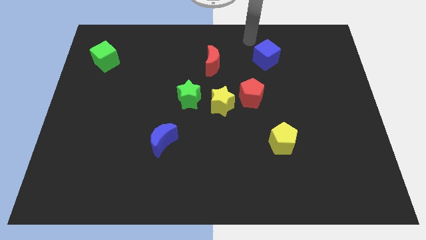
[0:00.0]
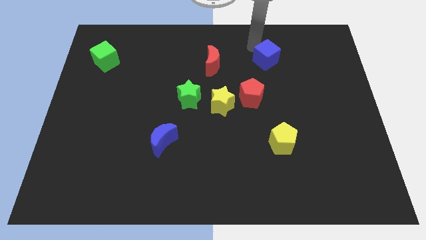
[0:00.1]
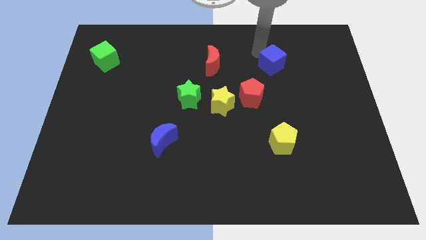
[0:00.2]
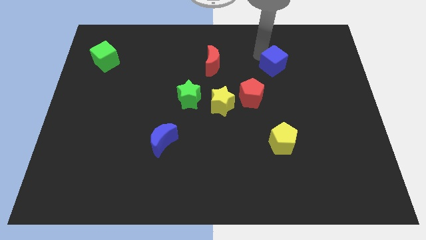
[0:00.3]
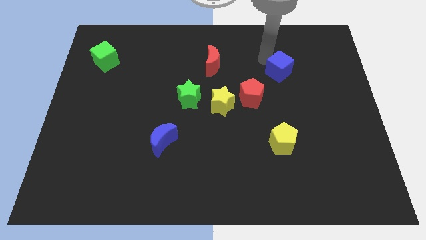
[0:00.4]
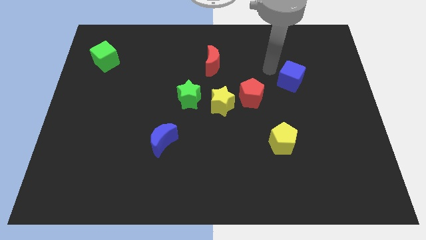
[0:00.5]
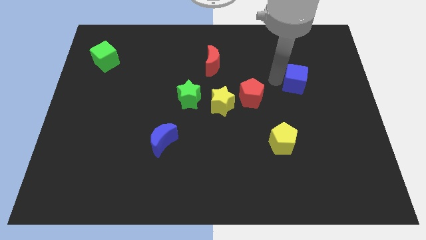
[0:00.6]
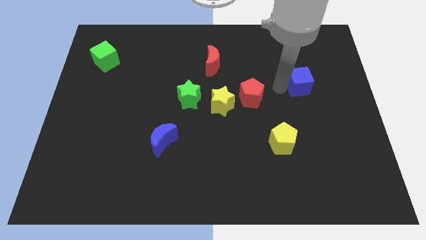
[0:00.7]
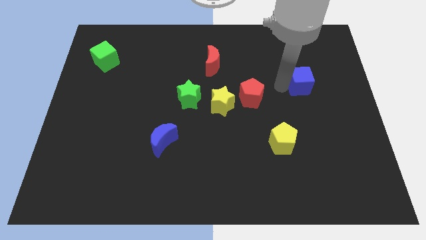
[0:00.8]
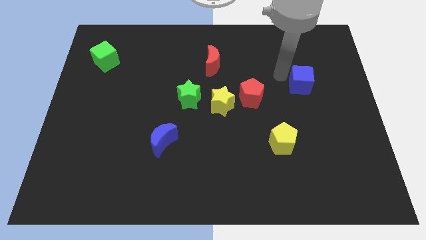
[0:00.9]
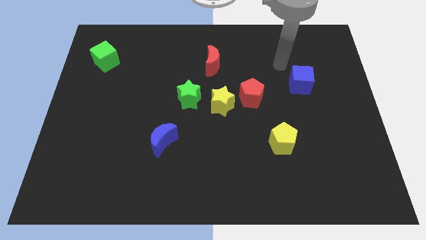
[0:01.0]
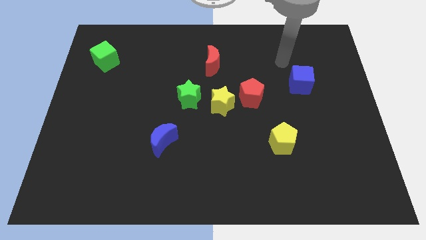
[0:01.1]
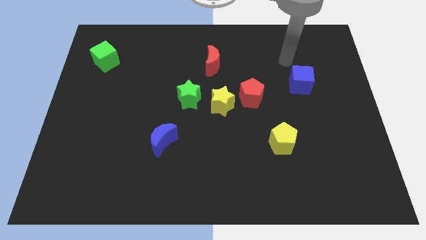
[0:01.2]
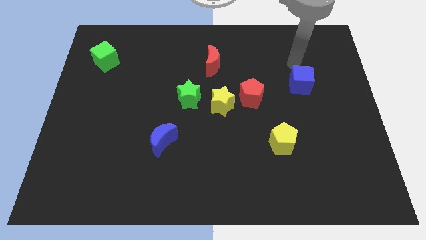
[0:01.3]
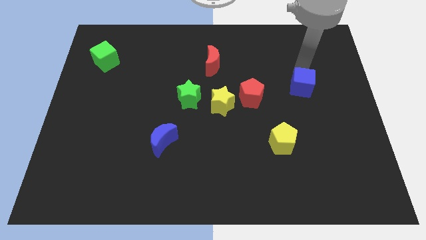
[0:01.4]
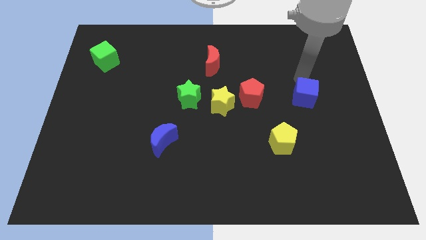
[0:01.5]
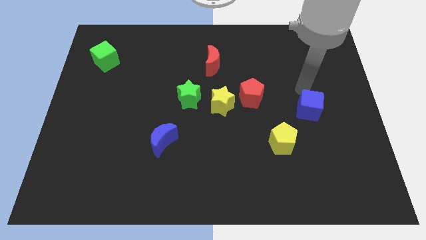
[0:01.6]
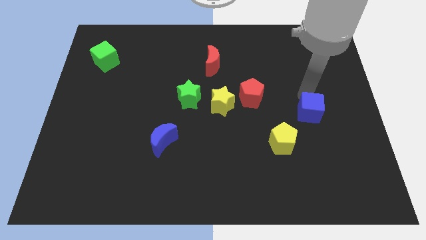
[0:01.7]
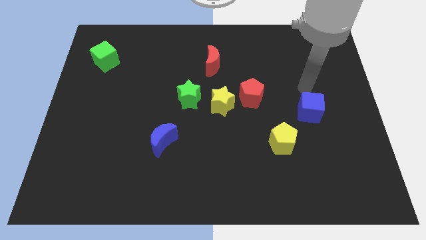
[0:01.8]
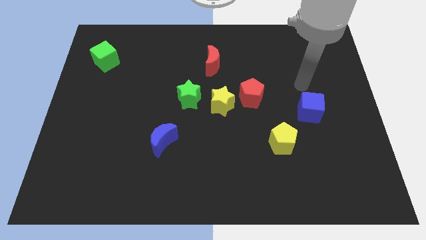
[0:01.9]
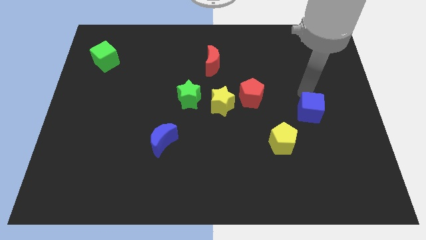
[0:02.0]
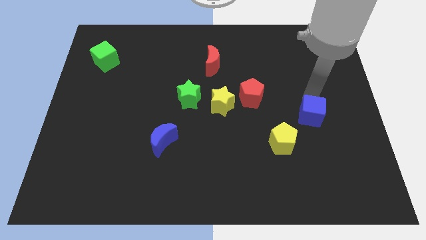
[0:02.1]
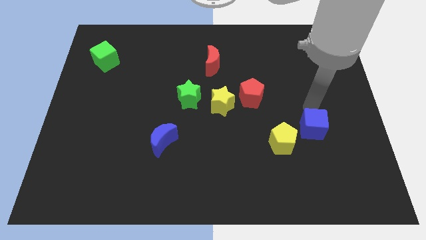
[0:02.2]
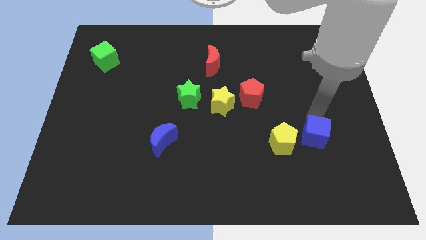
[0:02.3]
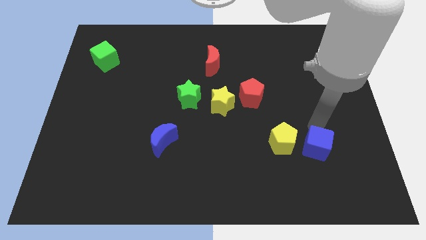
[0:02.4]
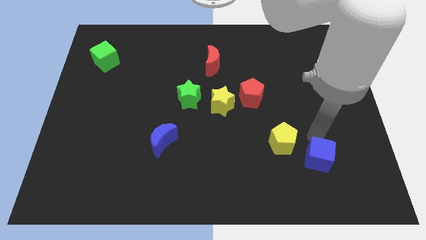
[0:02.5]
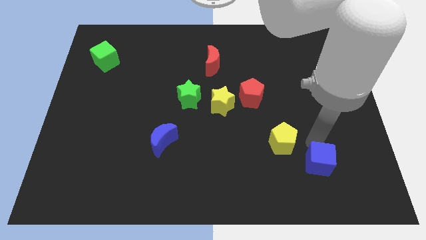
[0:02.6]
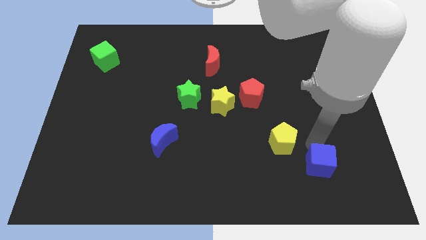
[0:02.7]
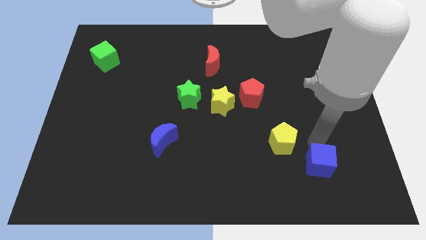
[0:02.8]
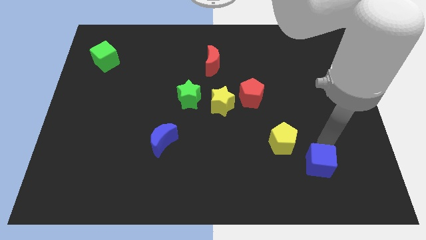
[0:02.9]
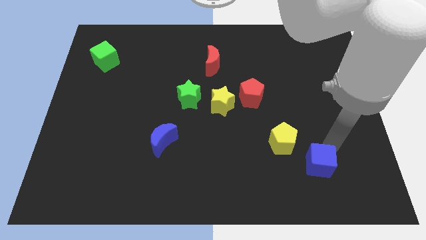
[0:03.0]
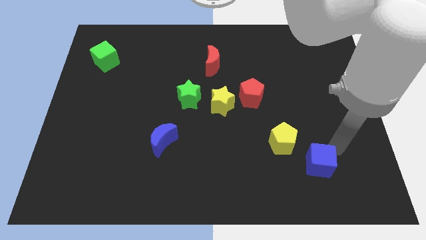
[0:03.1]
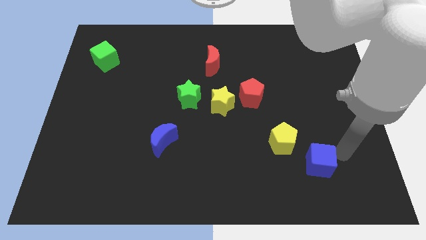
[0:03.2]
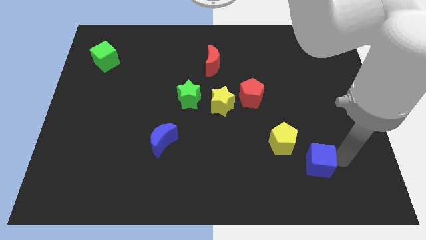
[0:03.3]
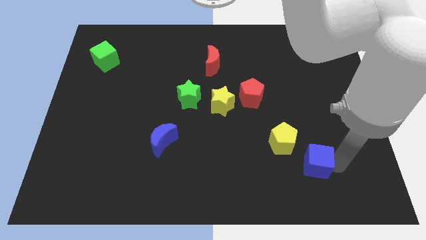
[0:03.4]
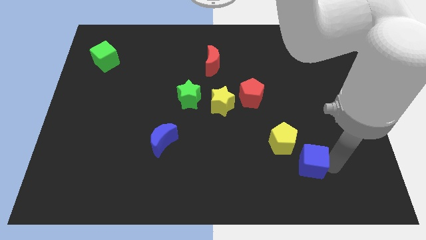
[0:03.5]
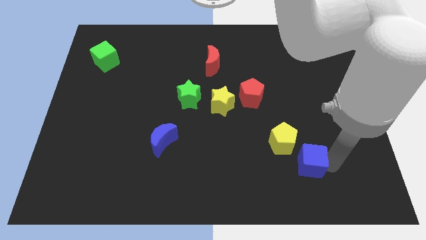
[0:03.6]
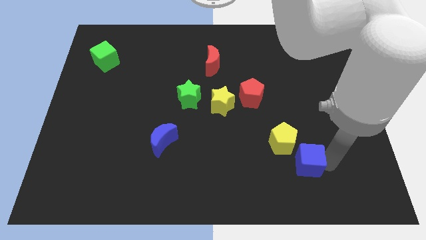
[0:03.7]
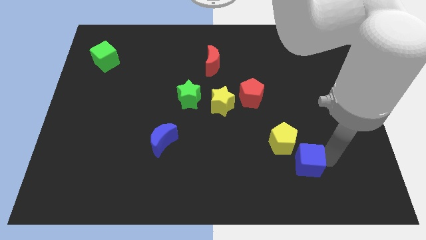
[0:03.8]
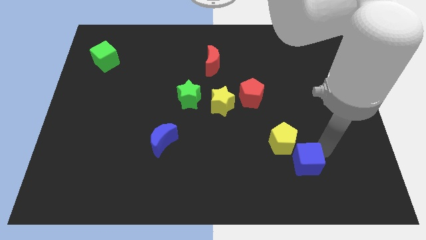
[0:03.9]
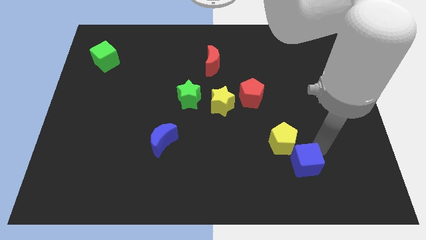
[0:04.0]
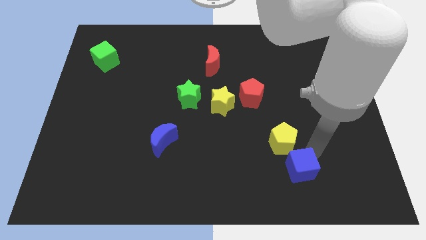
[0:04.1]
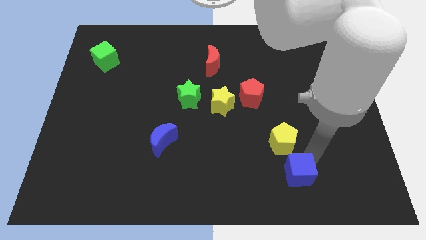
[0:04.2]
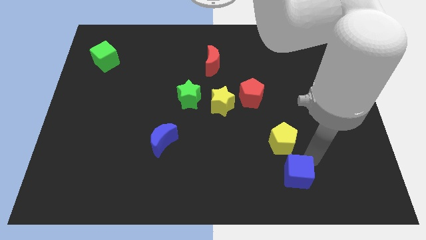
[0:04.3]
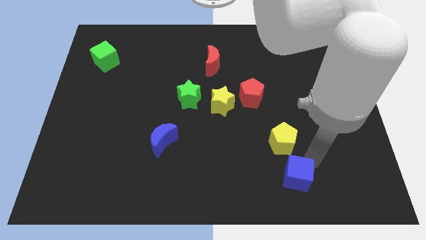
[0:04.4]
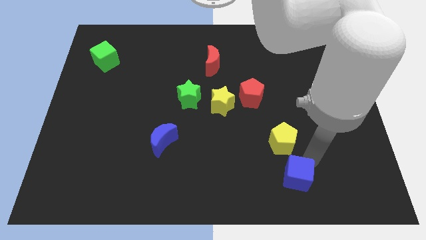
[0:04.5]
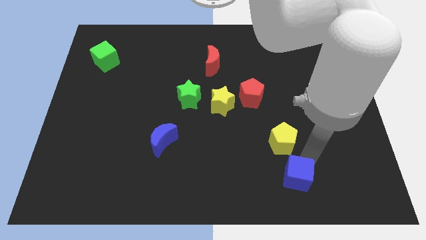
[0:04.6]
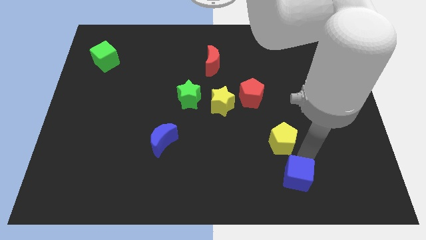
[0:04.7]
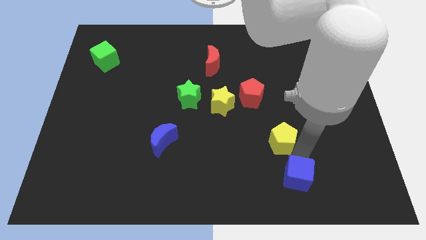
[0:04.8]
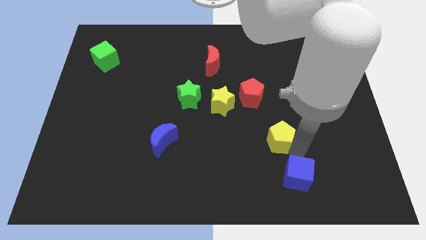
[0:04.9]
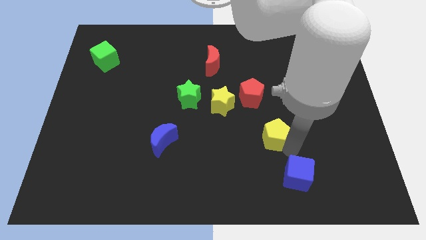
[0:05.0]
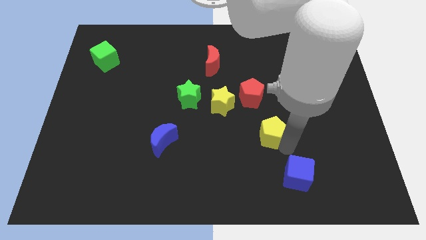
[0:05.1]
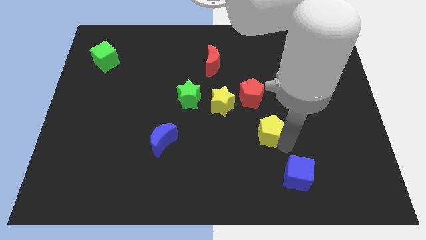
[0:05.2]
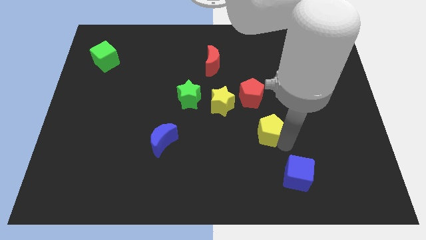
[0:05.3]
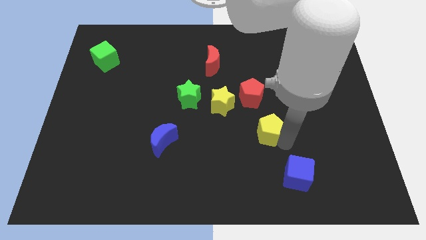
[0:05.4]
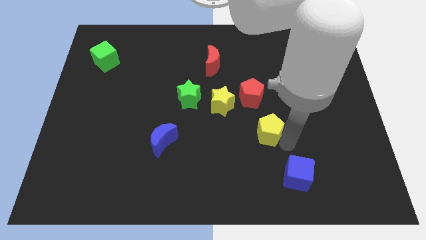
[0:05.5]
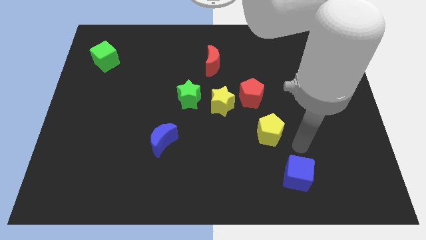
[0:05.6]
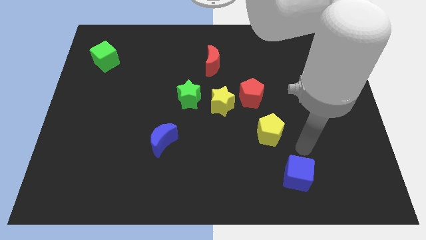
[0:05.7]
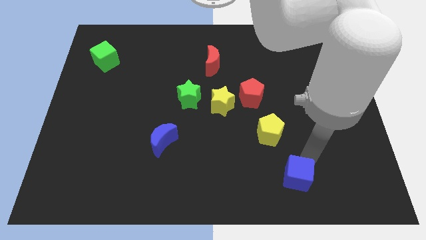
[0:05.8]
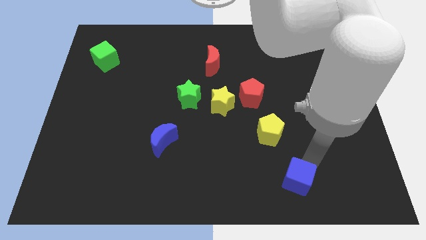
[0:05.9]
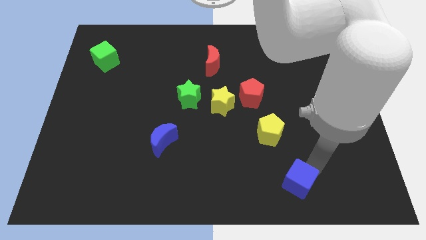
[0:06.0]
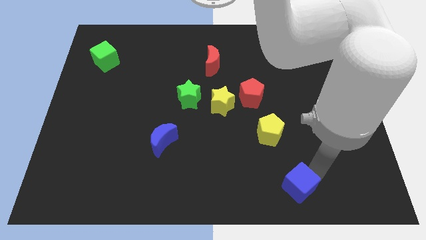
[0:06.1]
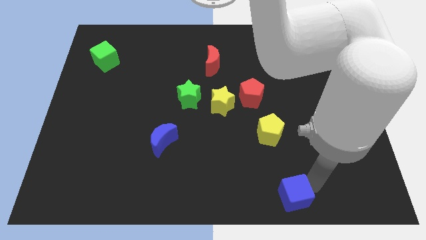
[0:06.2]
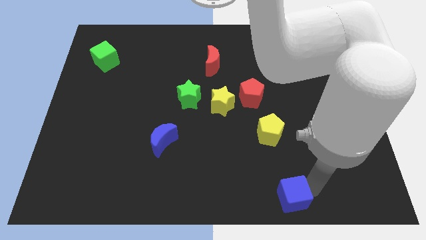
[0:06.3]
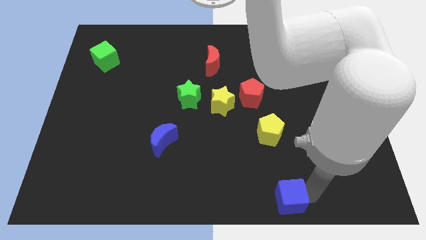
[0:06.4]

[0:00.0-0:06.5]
place the blue cube below the yellow pentagon

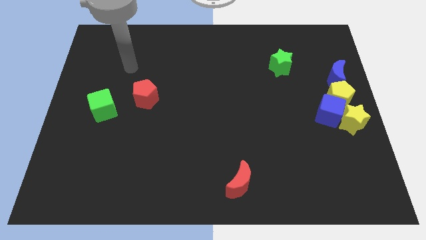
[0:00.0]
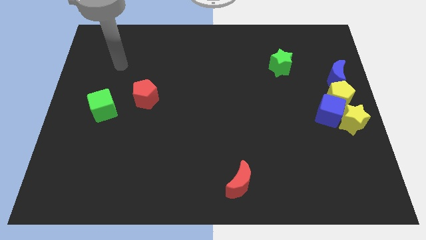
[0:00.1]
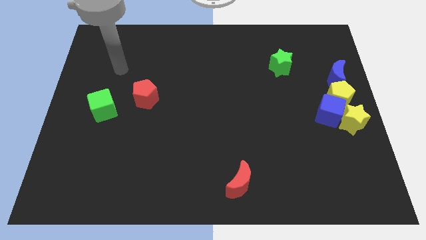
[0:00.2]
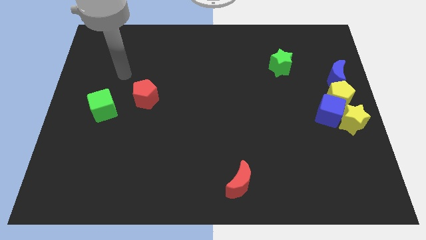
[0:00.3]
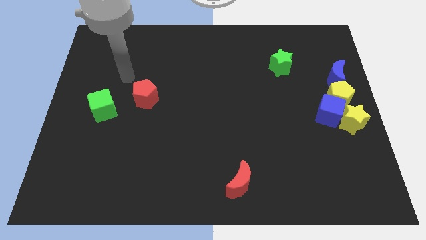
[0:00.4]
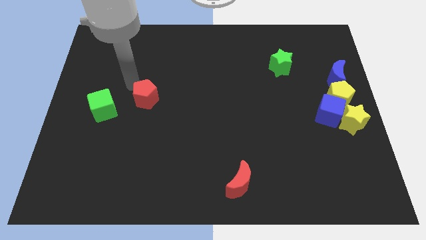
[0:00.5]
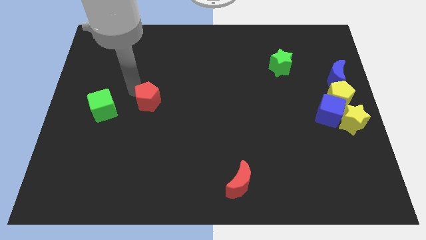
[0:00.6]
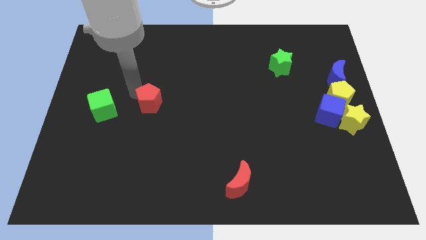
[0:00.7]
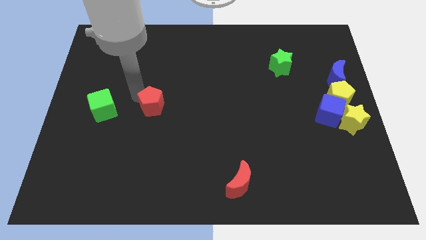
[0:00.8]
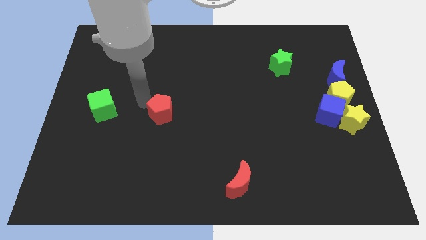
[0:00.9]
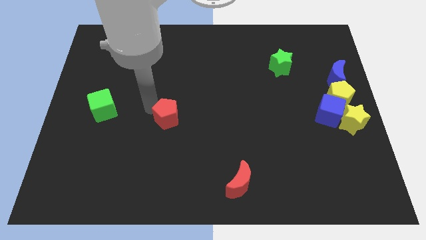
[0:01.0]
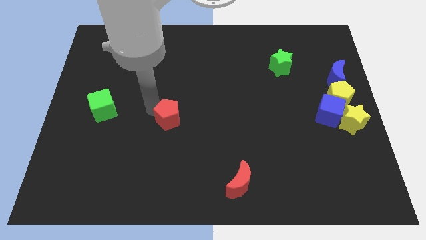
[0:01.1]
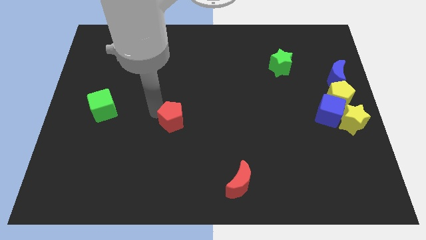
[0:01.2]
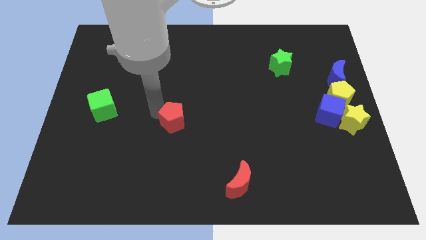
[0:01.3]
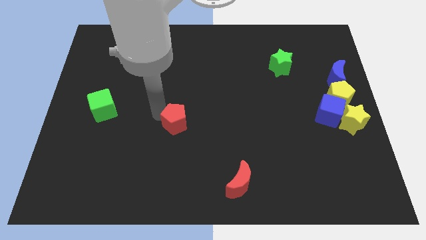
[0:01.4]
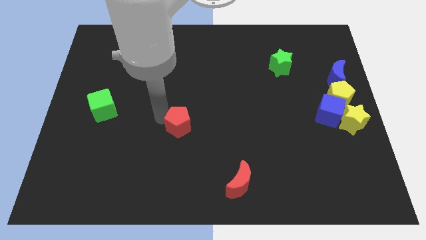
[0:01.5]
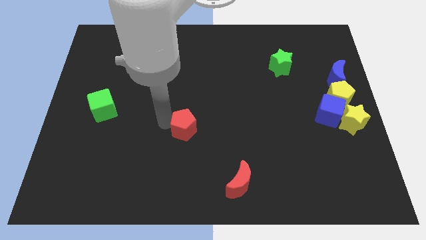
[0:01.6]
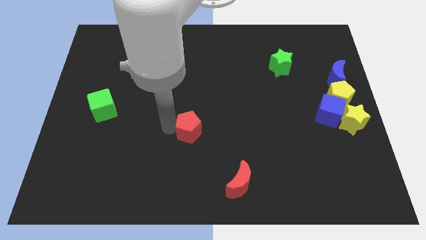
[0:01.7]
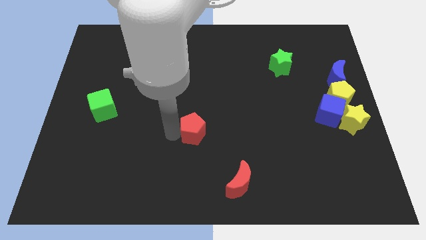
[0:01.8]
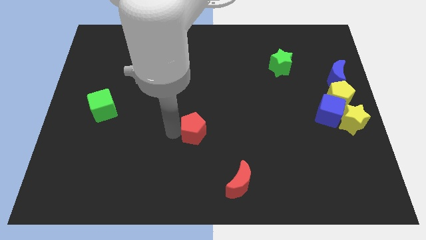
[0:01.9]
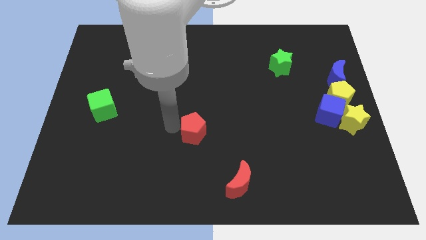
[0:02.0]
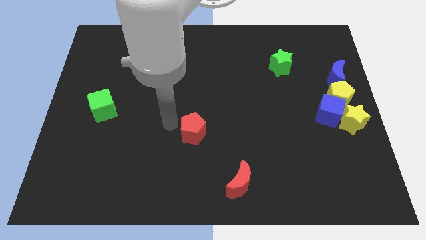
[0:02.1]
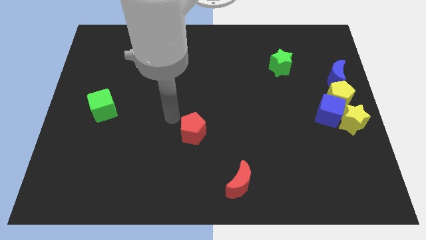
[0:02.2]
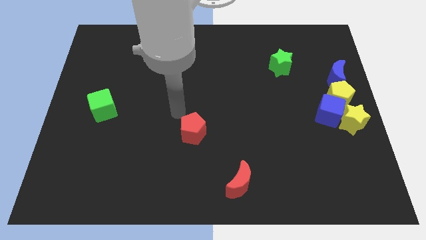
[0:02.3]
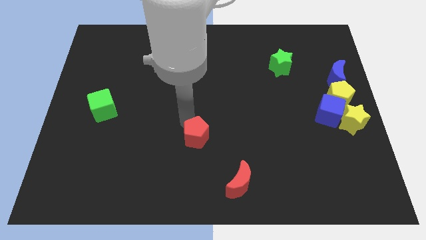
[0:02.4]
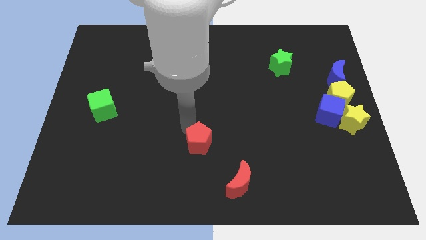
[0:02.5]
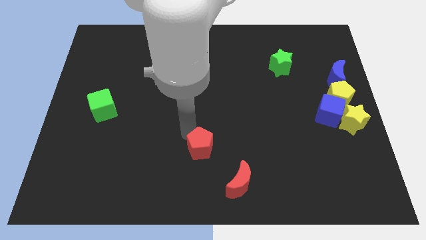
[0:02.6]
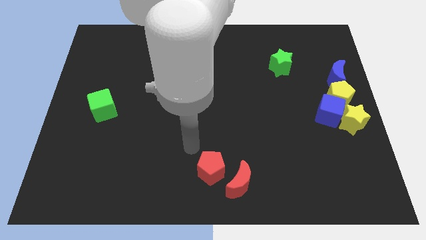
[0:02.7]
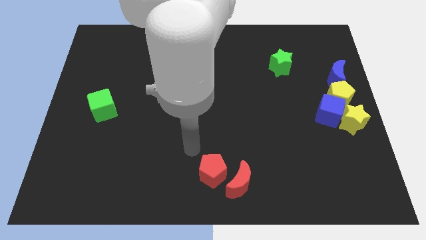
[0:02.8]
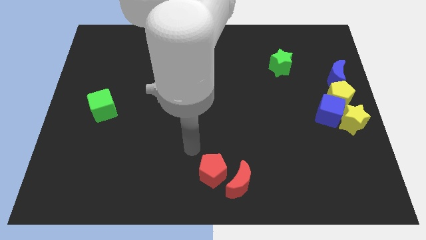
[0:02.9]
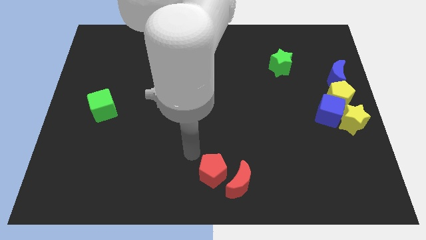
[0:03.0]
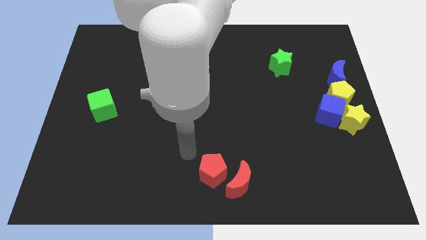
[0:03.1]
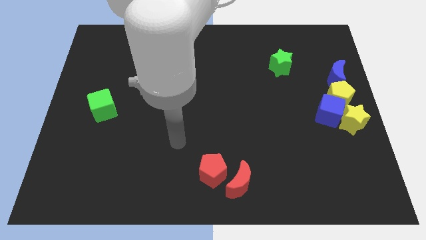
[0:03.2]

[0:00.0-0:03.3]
push the red pentagon left to the red crescent
